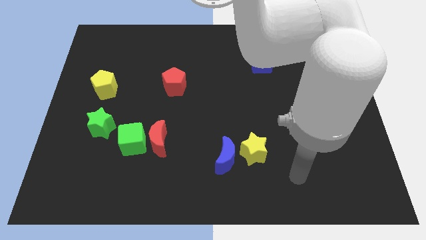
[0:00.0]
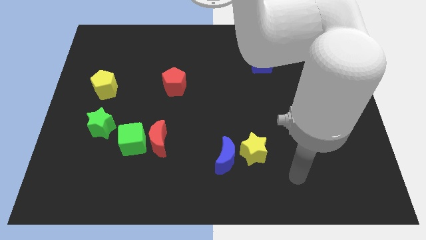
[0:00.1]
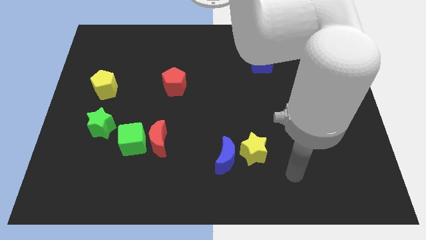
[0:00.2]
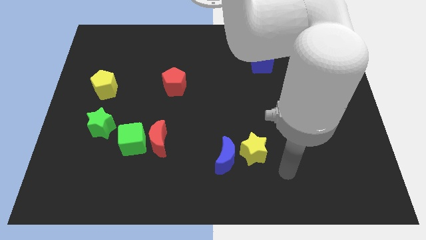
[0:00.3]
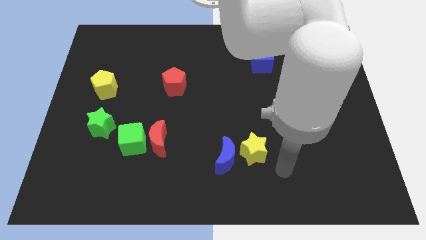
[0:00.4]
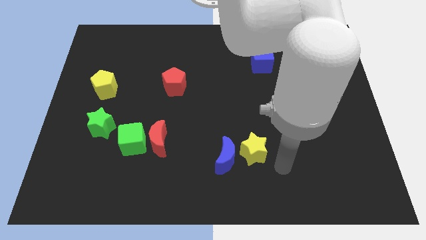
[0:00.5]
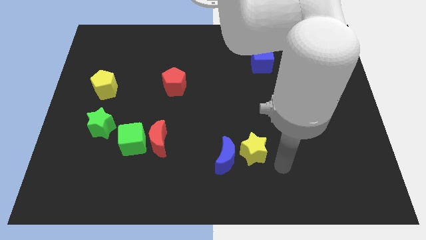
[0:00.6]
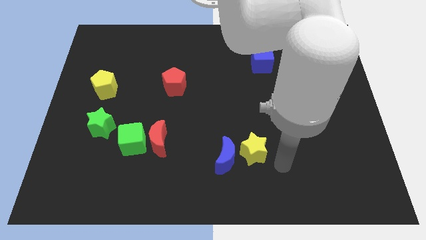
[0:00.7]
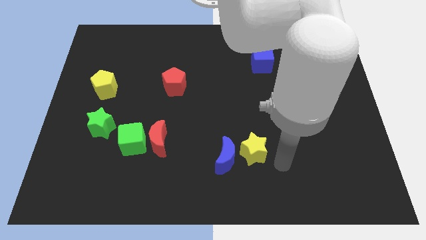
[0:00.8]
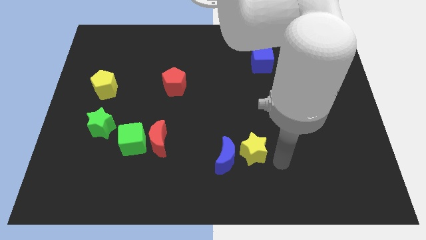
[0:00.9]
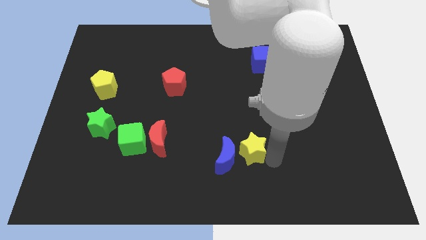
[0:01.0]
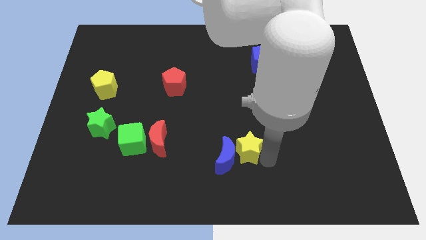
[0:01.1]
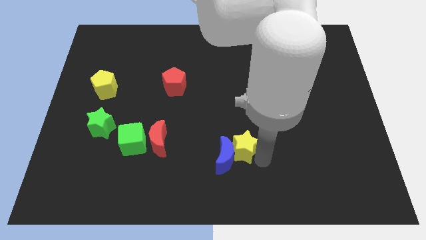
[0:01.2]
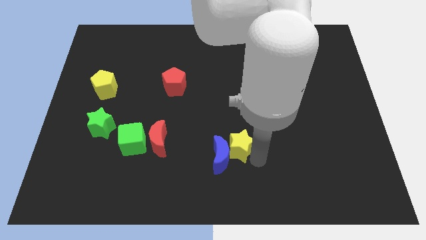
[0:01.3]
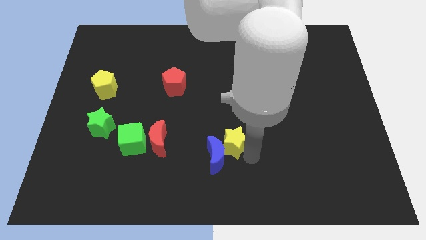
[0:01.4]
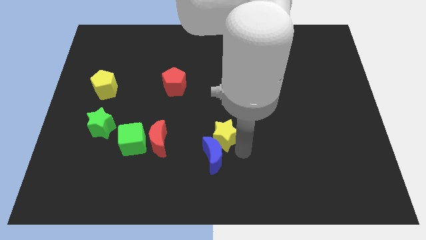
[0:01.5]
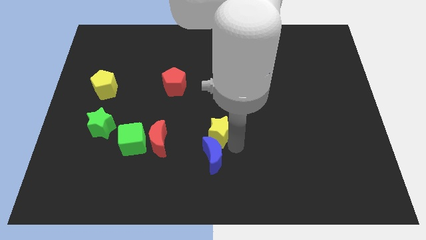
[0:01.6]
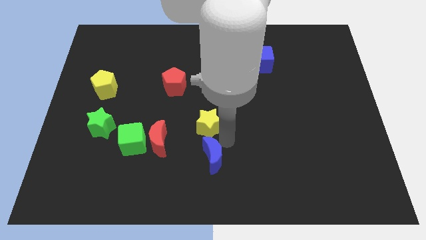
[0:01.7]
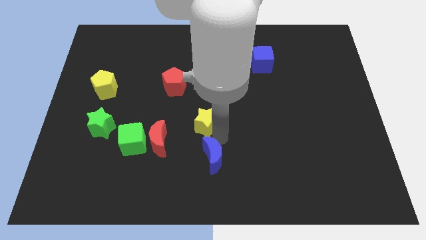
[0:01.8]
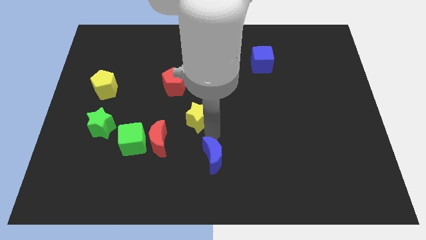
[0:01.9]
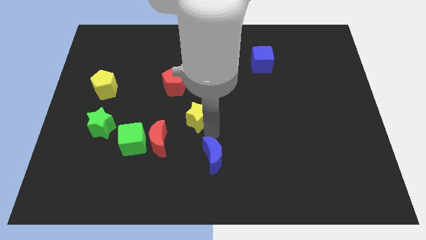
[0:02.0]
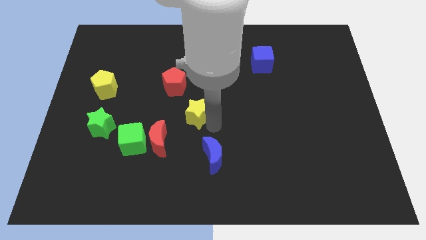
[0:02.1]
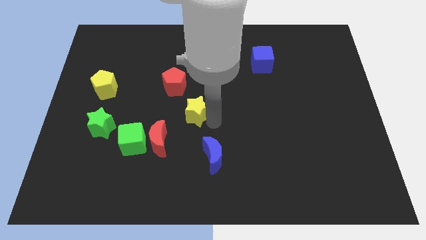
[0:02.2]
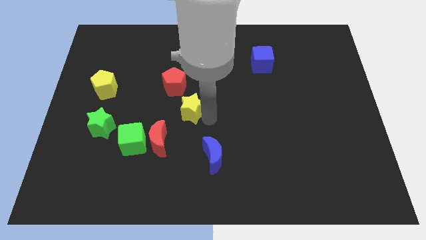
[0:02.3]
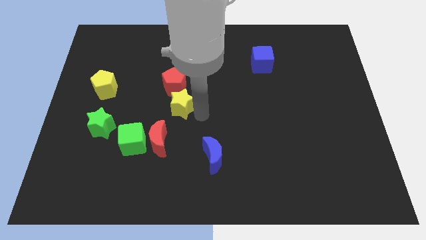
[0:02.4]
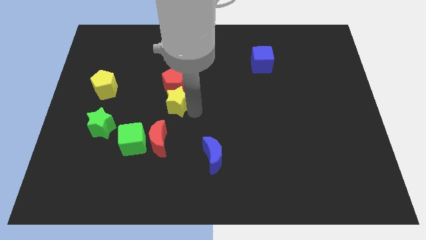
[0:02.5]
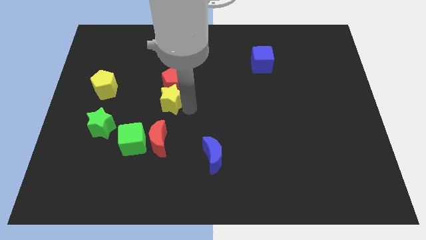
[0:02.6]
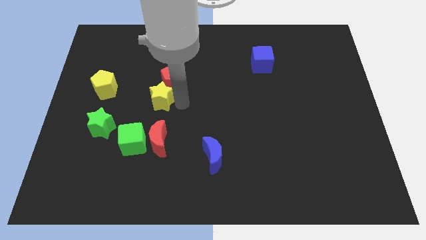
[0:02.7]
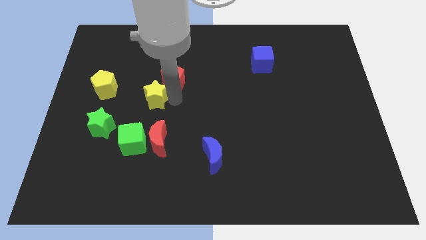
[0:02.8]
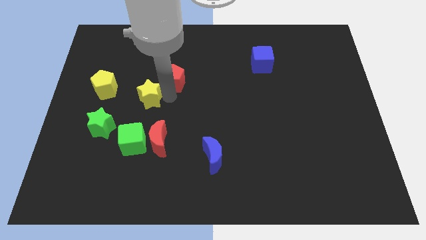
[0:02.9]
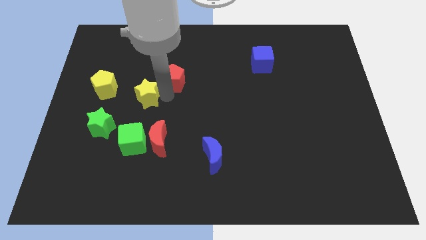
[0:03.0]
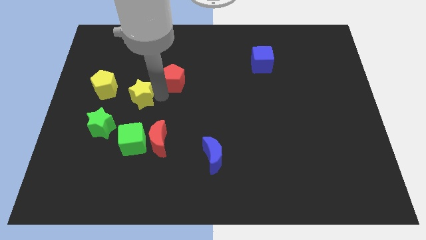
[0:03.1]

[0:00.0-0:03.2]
put the yellow star diagonally bottom left to the red pentagon

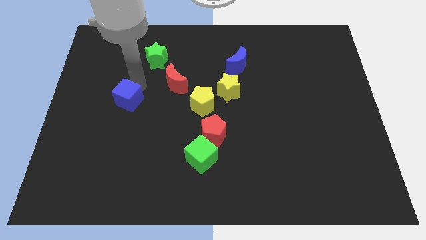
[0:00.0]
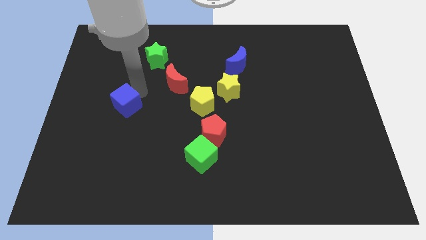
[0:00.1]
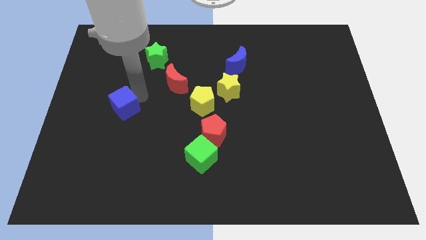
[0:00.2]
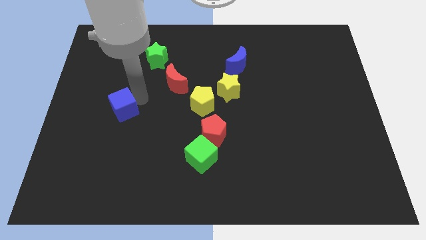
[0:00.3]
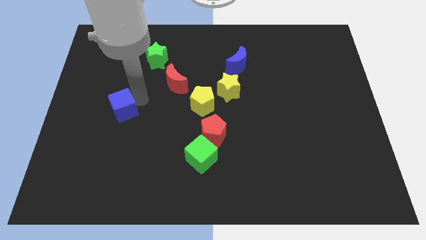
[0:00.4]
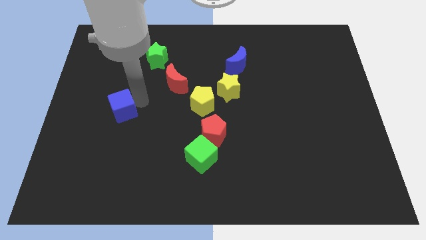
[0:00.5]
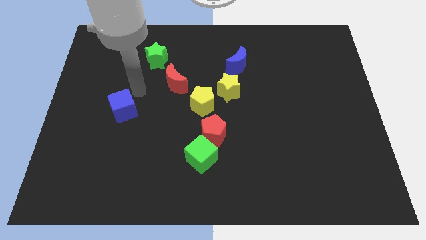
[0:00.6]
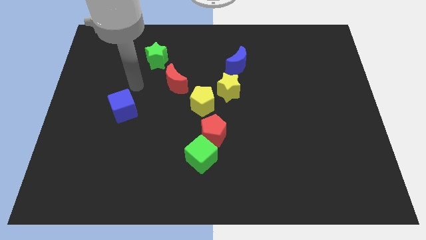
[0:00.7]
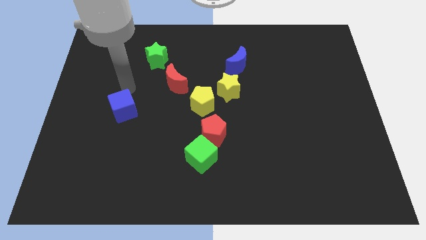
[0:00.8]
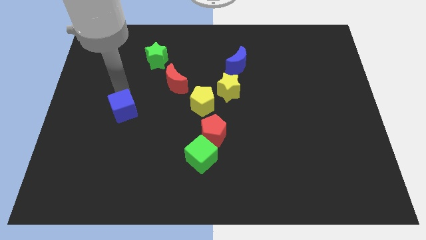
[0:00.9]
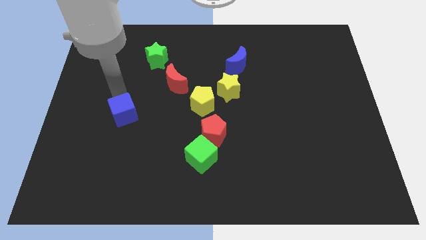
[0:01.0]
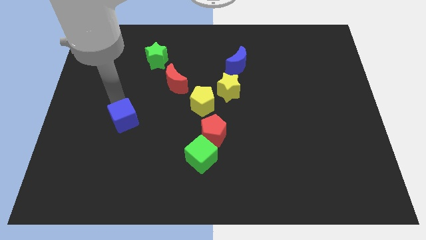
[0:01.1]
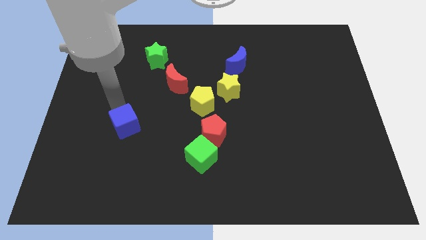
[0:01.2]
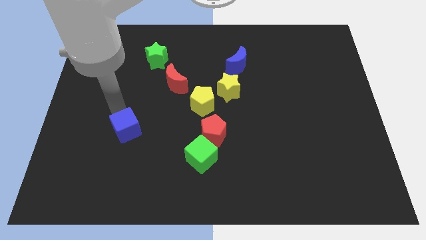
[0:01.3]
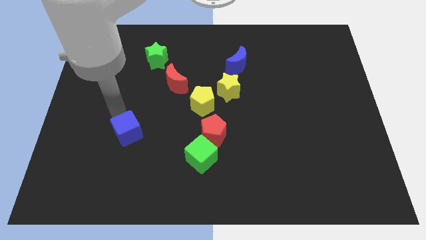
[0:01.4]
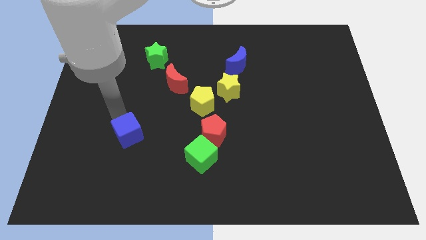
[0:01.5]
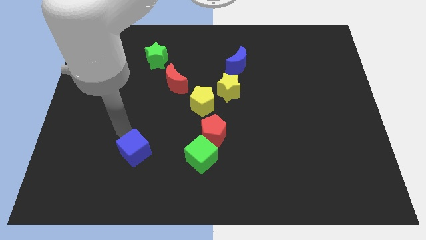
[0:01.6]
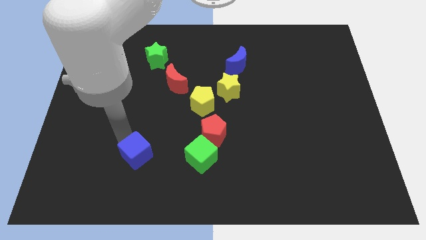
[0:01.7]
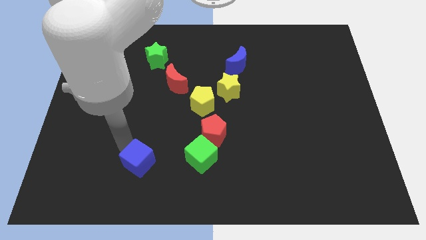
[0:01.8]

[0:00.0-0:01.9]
move the blue cube horizontally left to the green cube

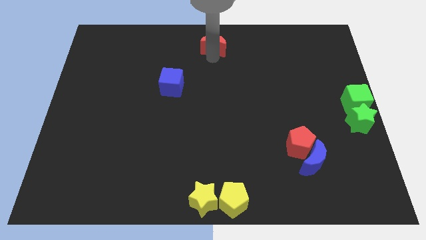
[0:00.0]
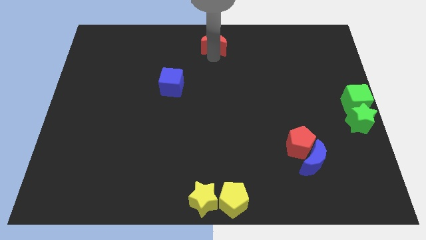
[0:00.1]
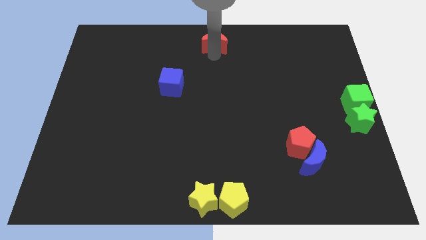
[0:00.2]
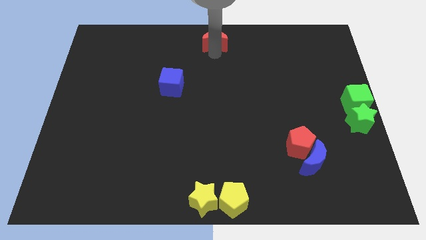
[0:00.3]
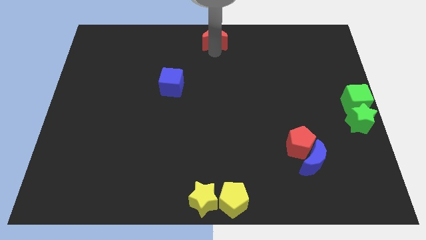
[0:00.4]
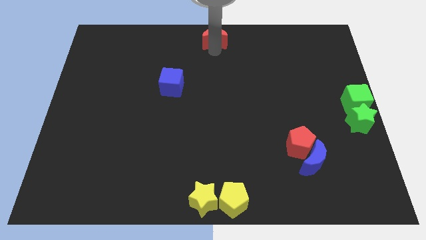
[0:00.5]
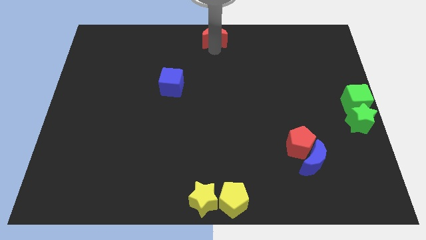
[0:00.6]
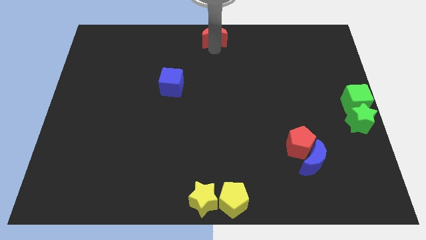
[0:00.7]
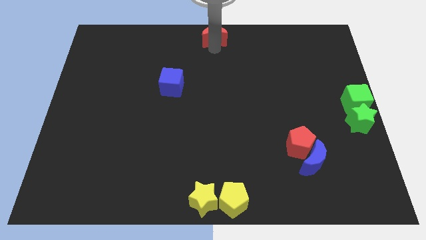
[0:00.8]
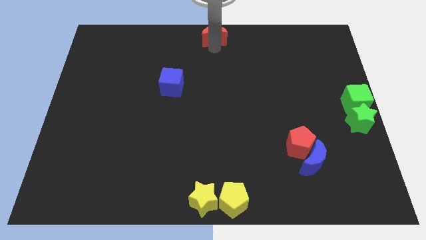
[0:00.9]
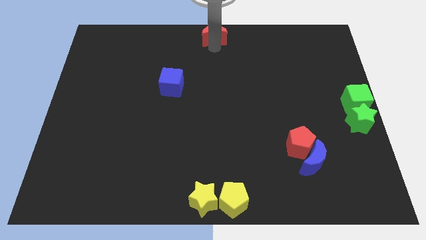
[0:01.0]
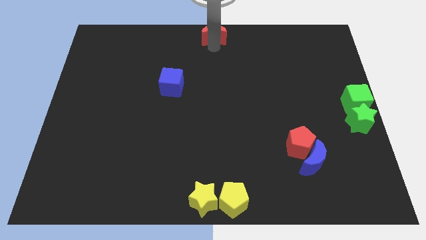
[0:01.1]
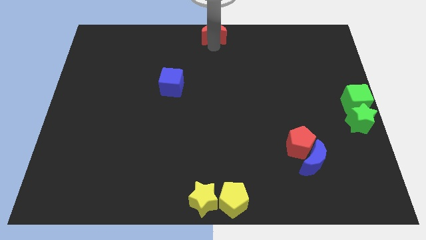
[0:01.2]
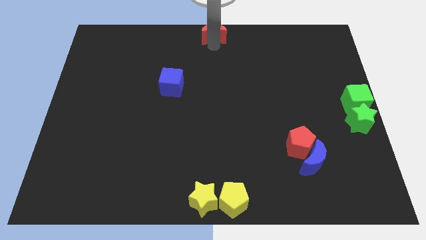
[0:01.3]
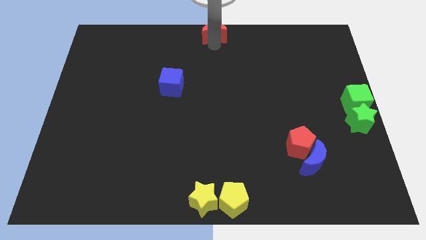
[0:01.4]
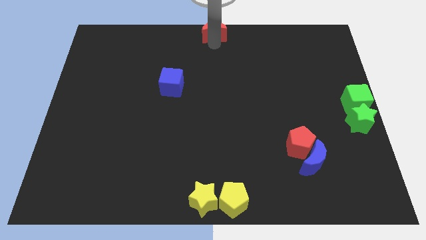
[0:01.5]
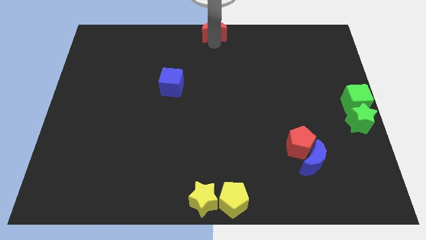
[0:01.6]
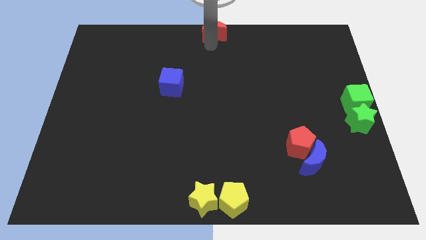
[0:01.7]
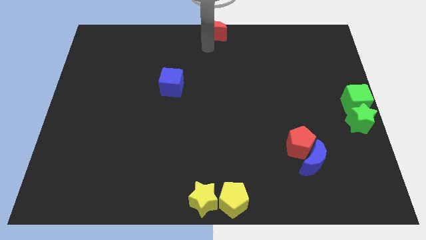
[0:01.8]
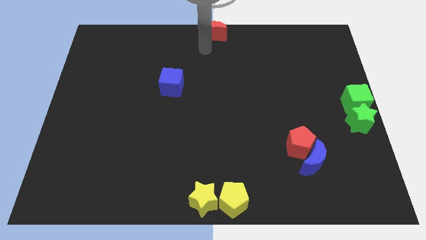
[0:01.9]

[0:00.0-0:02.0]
push the red crescent to the top center of the board

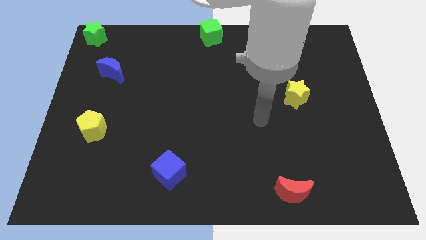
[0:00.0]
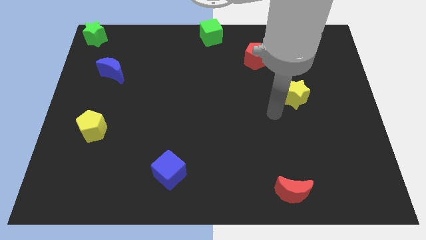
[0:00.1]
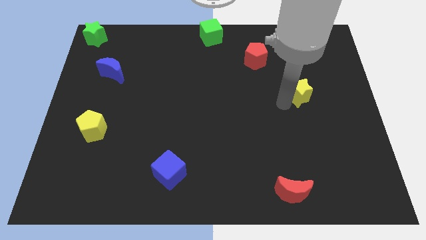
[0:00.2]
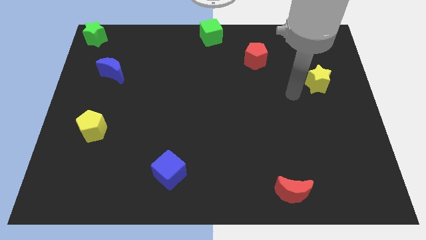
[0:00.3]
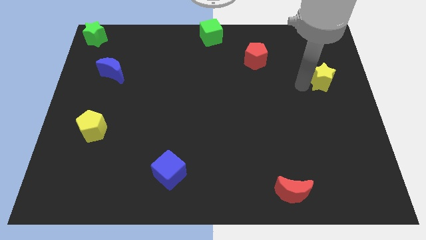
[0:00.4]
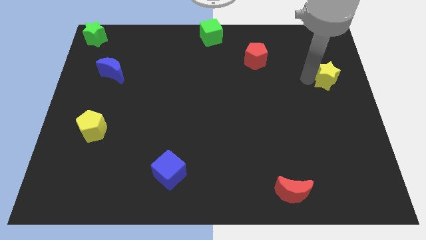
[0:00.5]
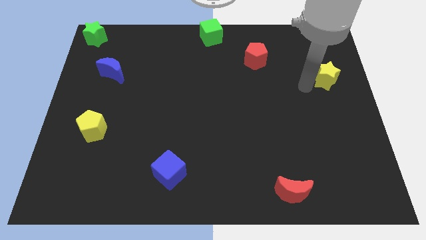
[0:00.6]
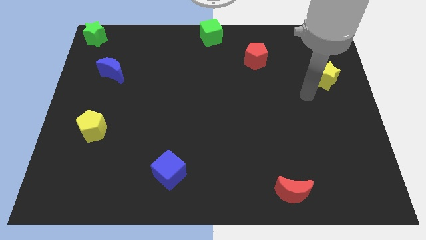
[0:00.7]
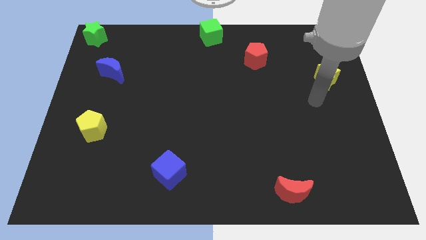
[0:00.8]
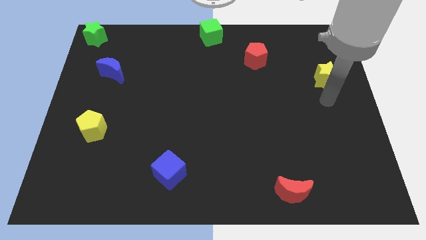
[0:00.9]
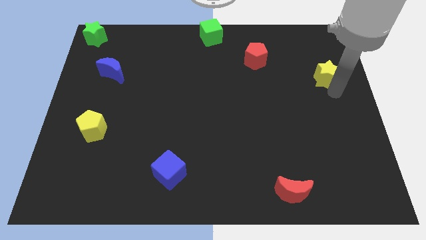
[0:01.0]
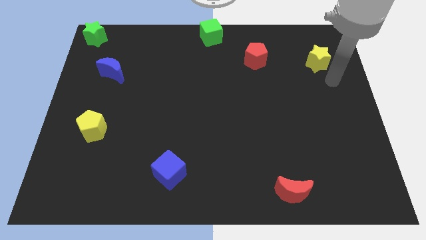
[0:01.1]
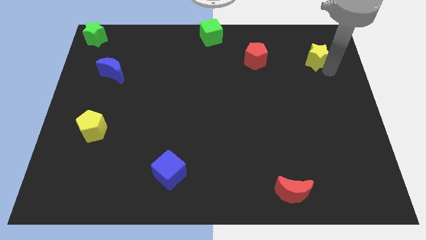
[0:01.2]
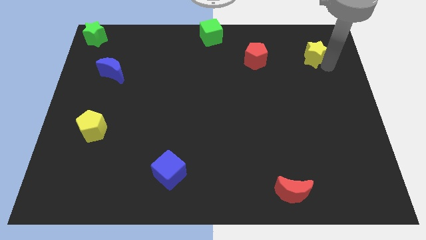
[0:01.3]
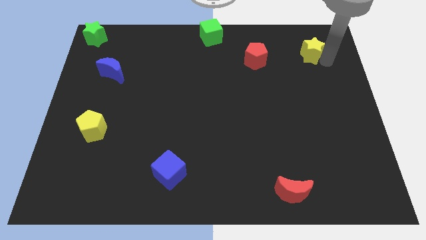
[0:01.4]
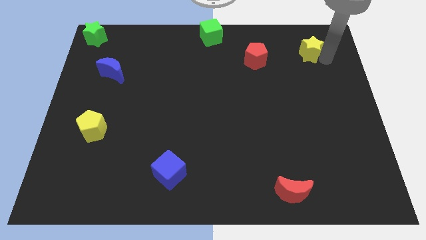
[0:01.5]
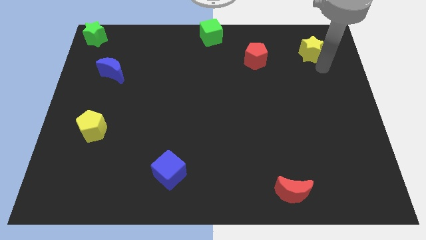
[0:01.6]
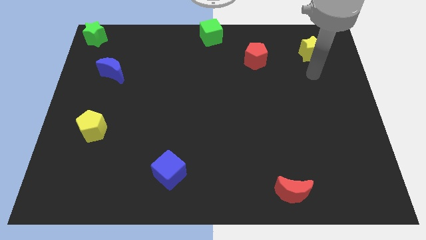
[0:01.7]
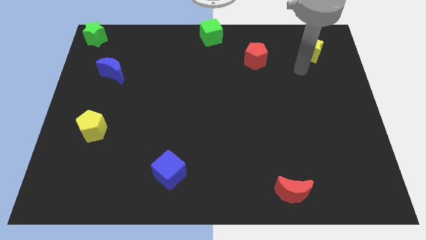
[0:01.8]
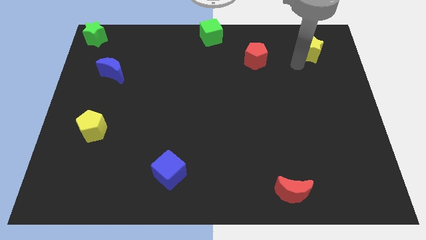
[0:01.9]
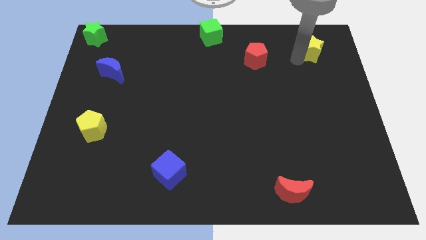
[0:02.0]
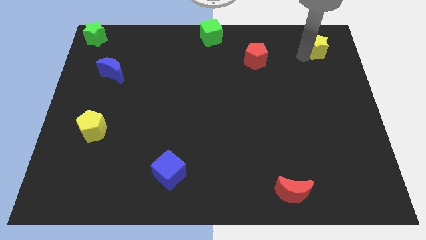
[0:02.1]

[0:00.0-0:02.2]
place yellow star to the right of red pentagon
